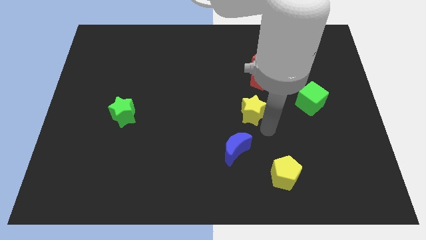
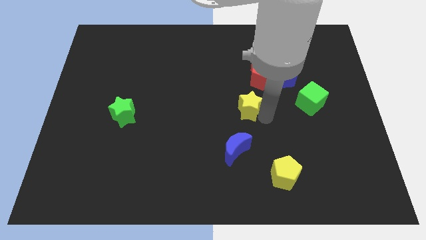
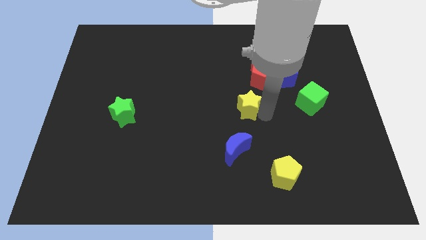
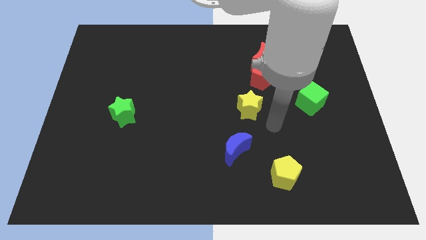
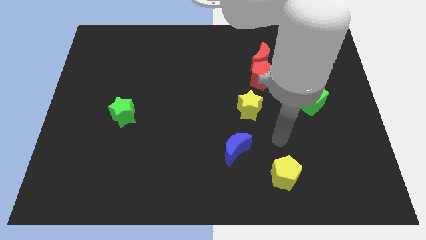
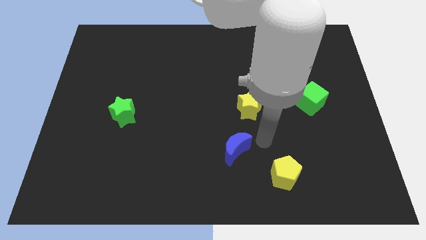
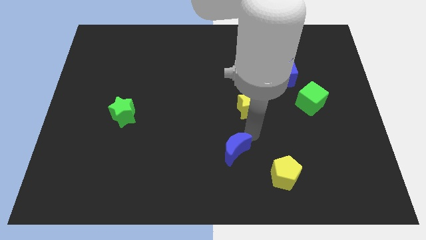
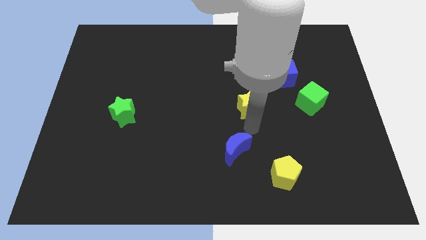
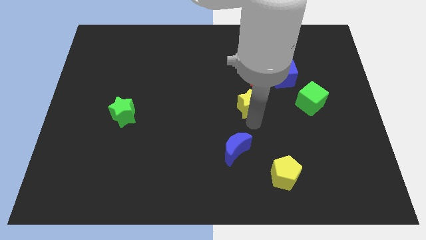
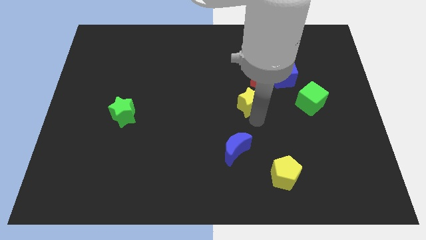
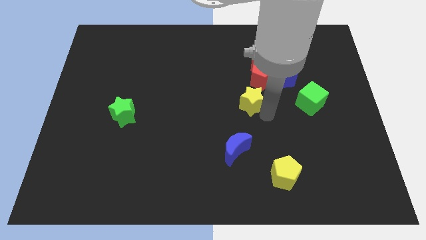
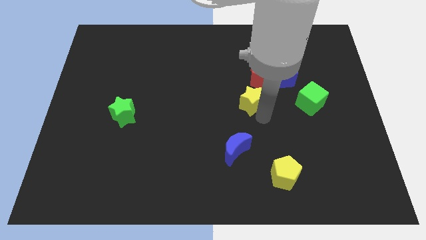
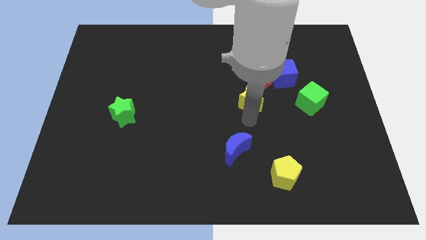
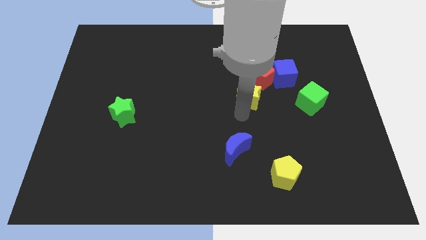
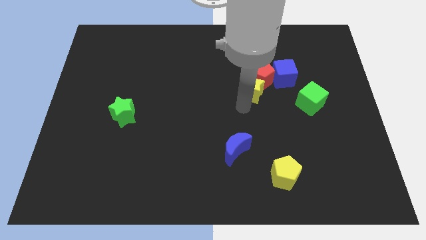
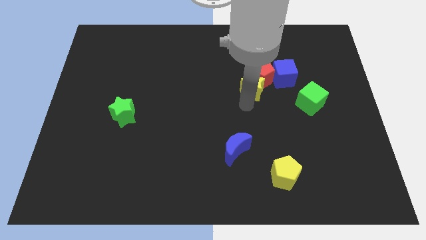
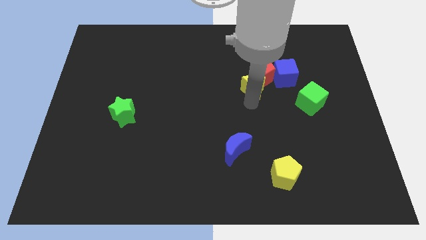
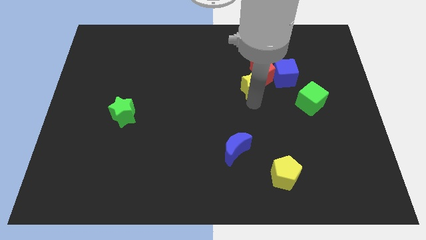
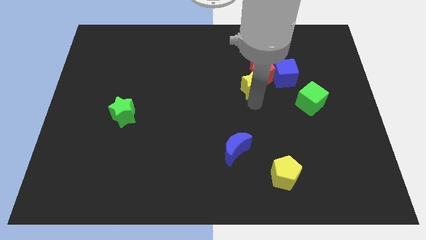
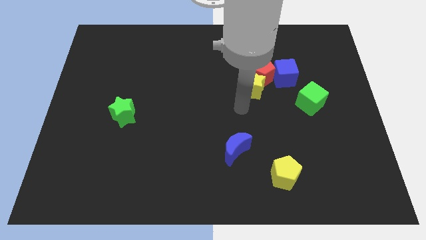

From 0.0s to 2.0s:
push the yellow star into the red pentagon

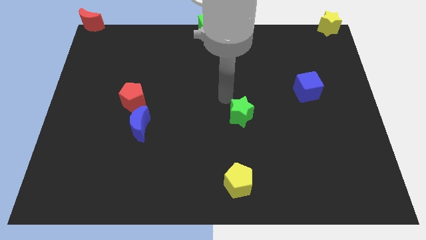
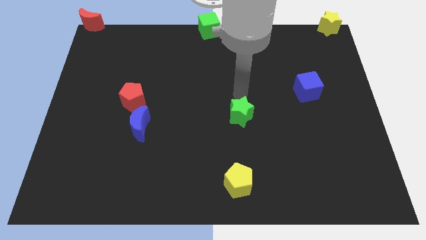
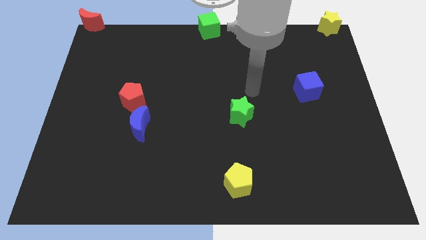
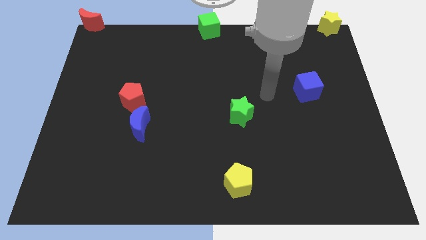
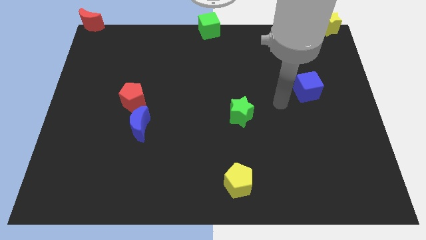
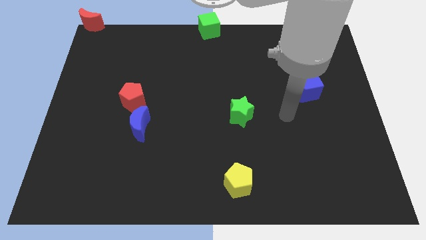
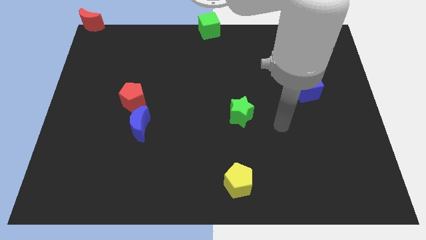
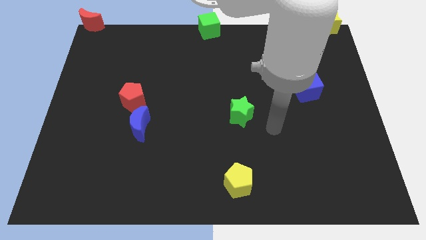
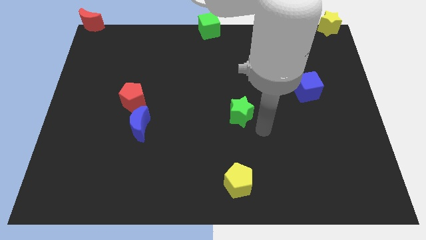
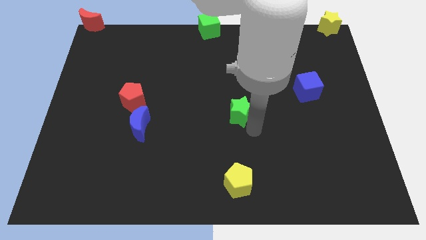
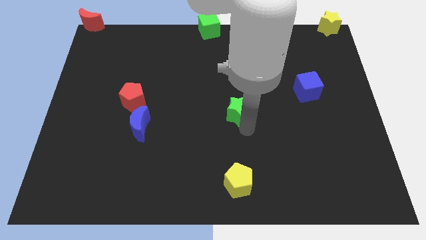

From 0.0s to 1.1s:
move your arm to the bottom of the green star

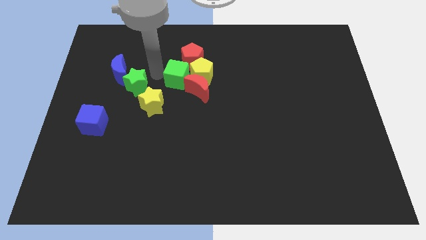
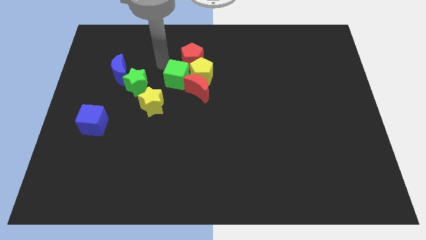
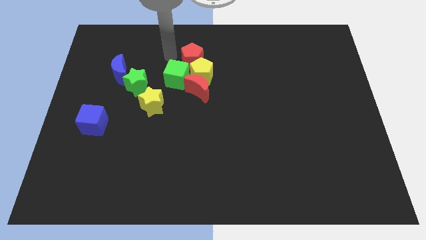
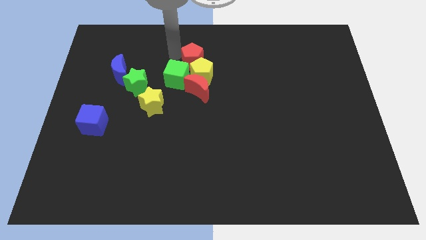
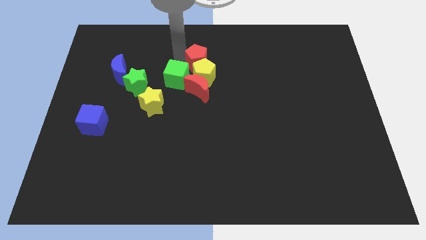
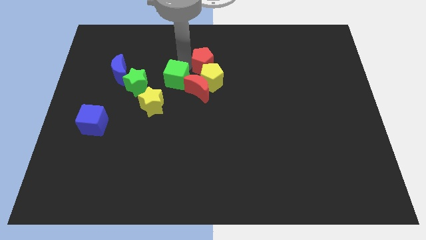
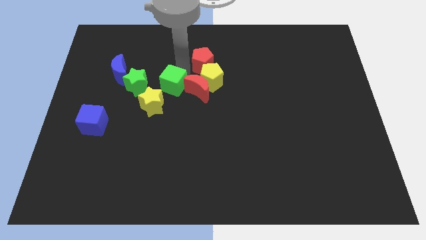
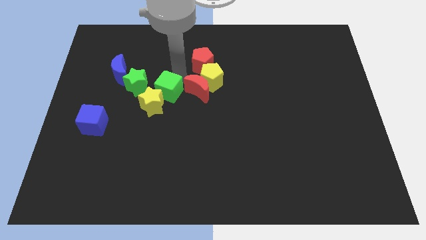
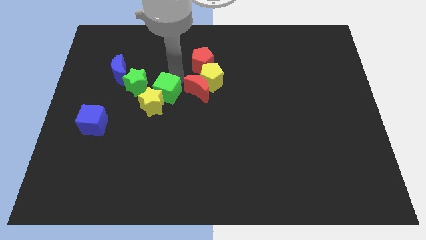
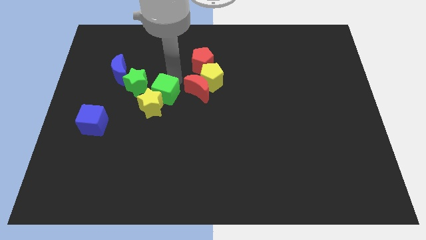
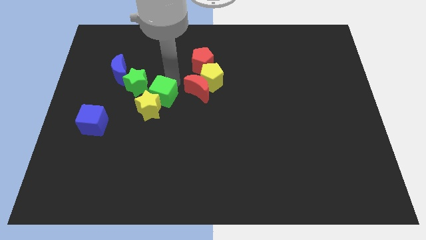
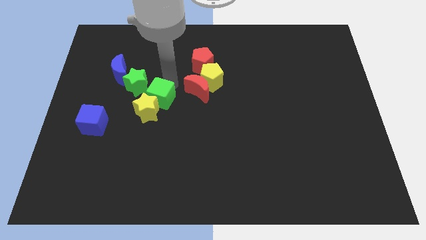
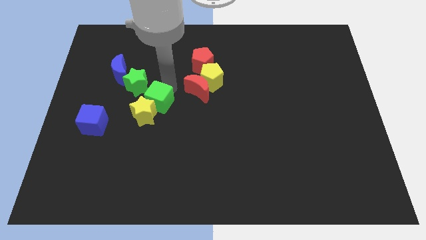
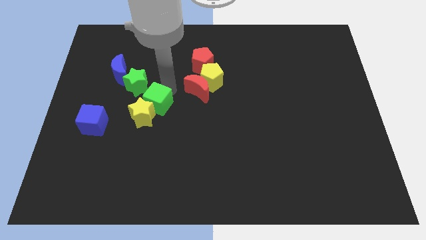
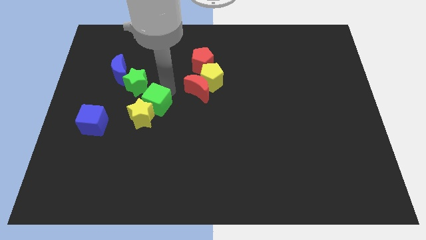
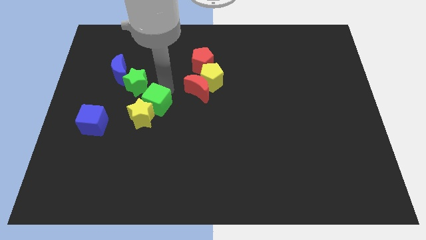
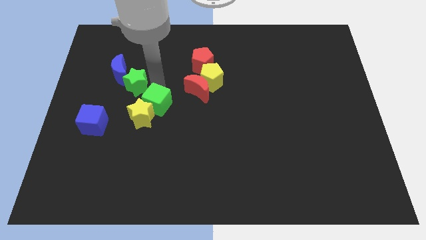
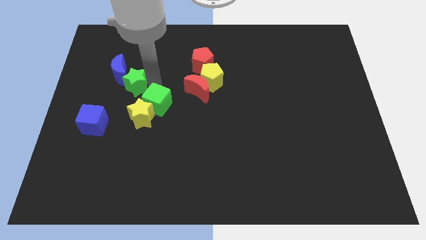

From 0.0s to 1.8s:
push green cube into yellow star

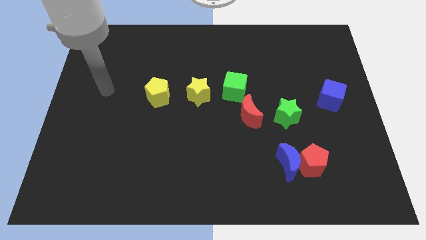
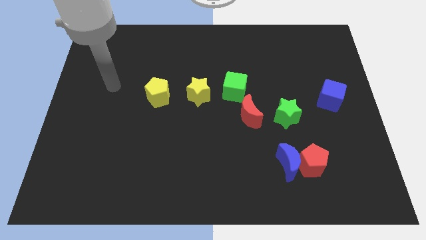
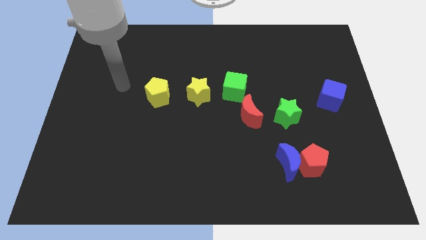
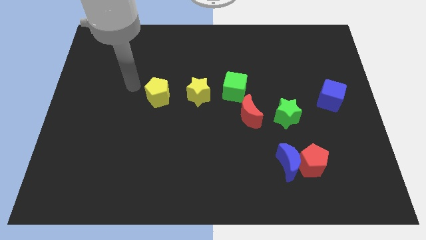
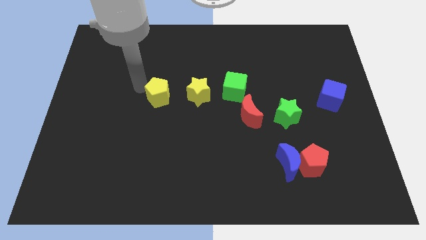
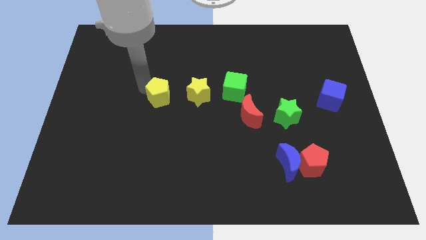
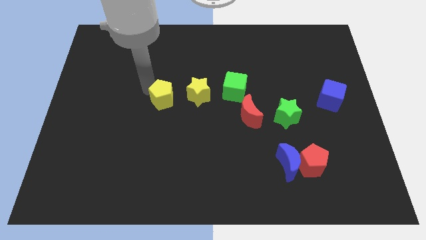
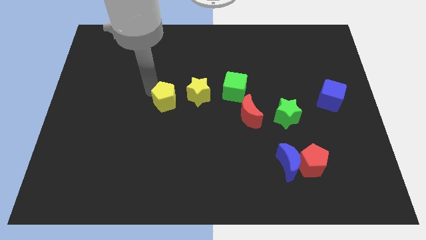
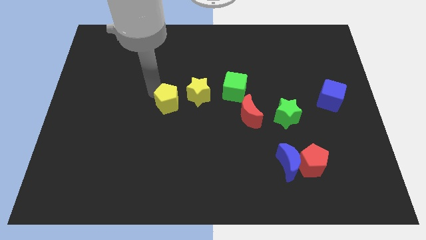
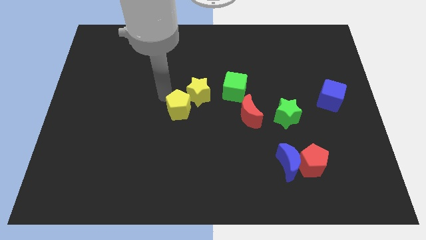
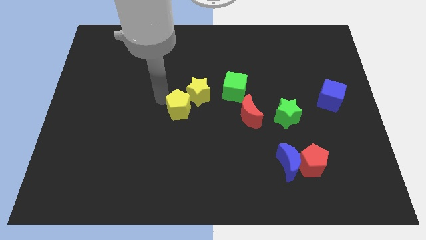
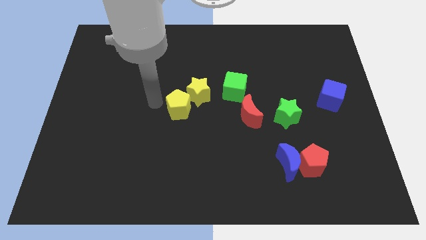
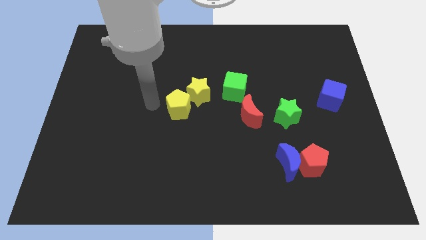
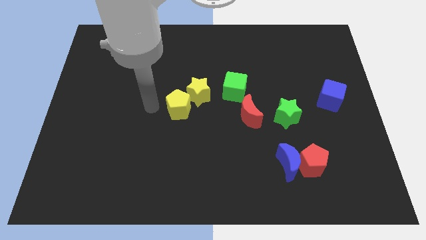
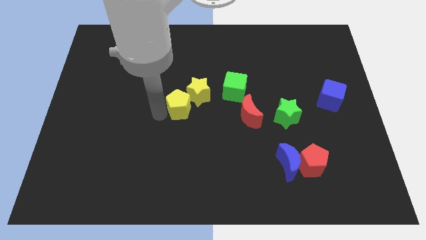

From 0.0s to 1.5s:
place the yellow pentagon at the bottom left side of yellow star

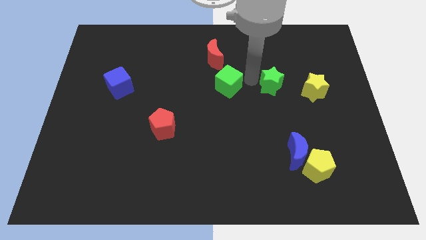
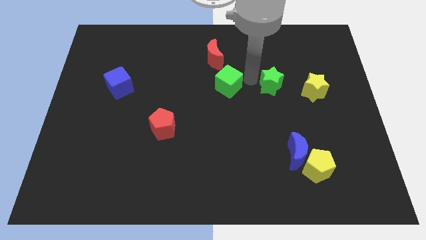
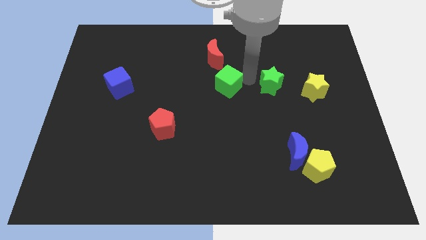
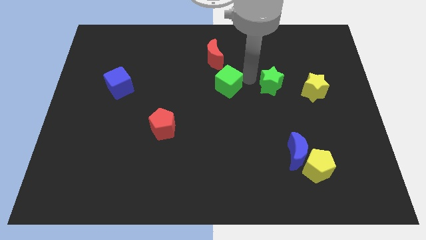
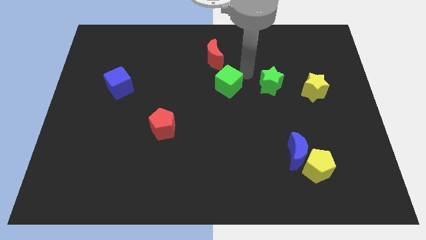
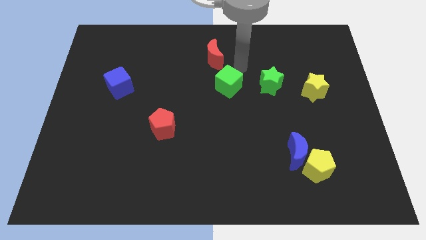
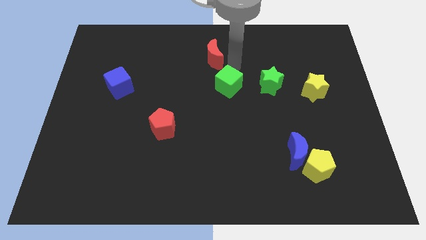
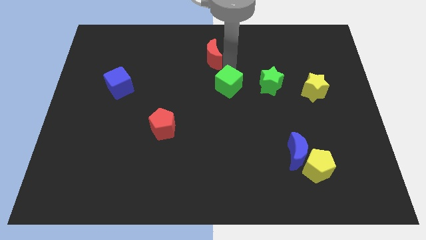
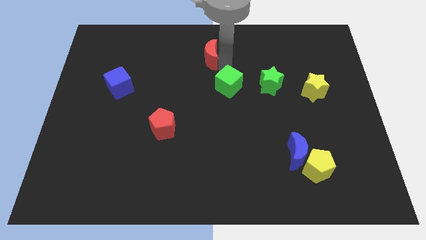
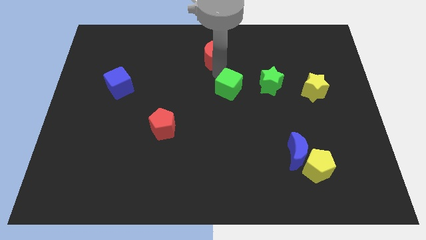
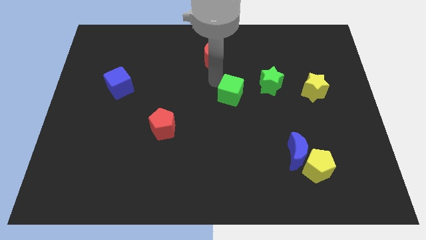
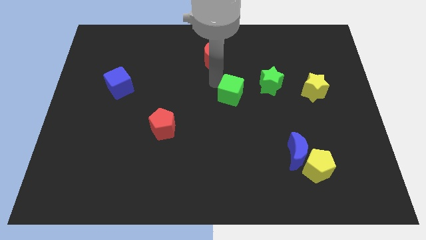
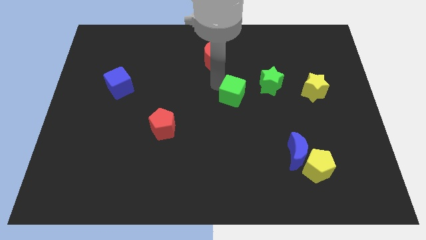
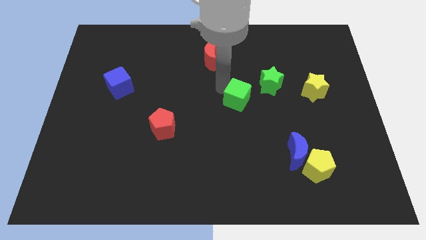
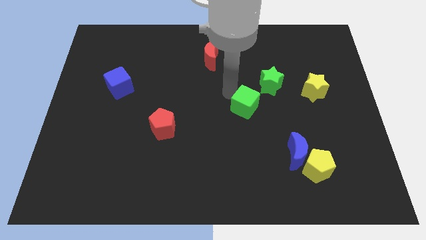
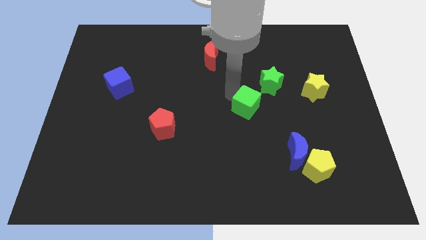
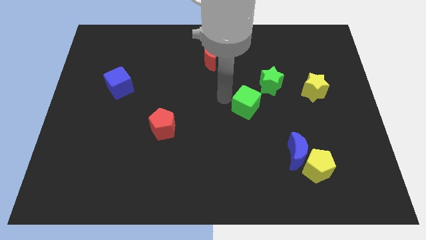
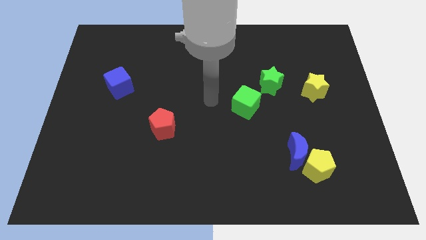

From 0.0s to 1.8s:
place the green cube at the bottom left of the green star

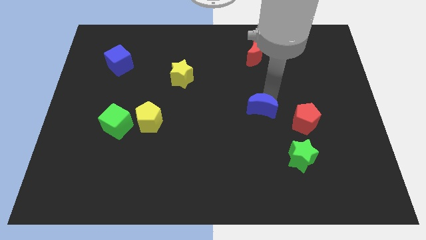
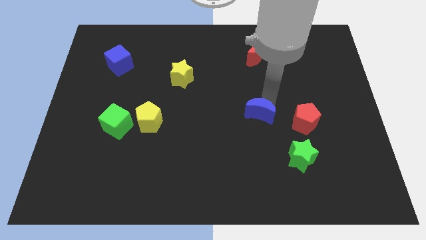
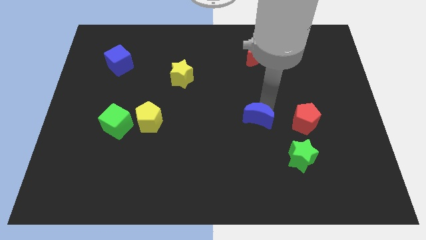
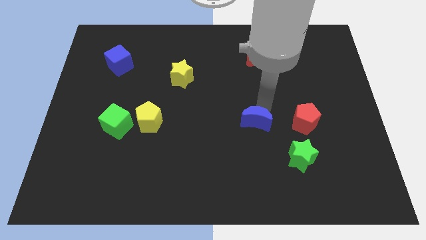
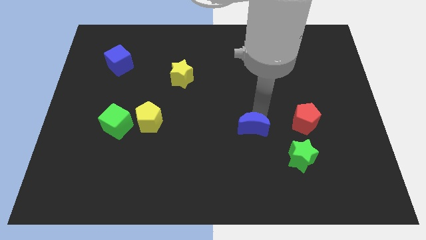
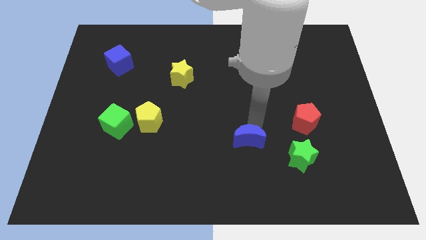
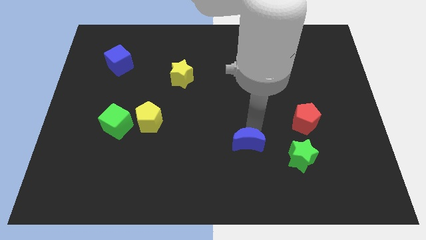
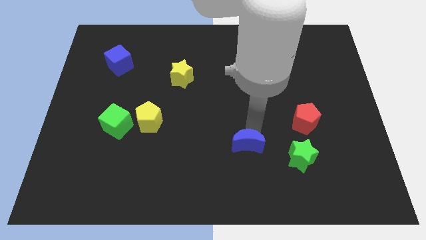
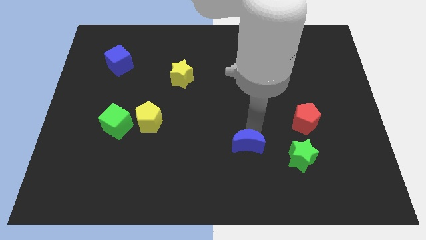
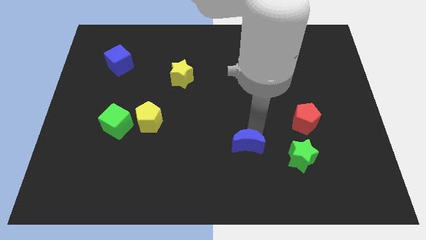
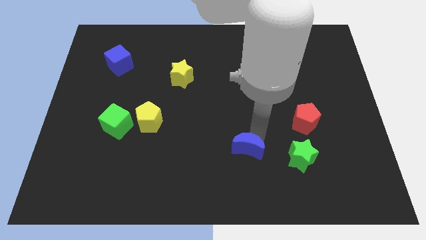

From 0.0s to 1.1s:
move blue moon to the left of green star
